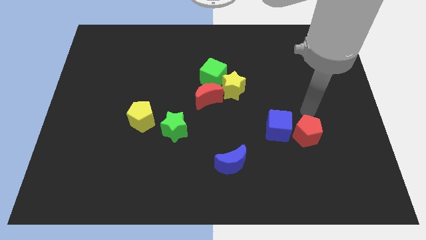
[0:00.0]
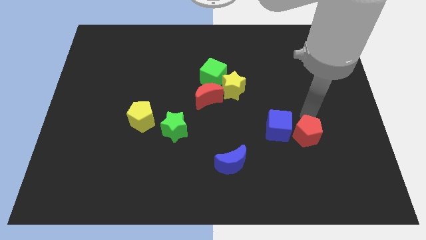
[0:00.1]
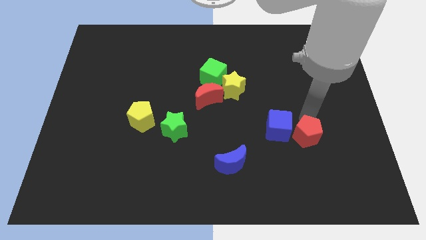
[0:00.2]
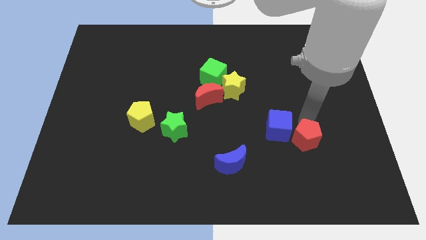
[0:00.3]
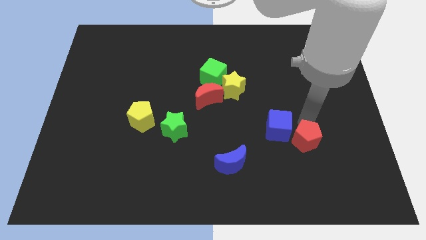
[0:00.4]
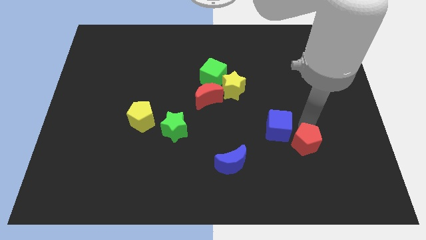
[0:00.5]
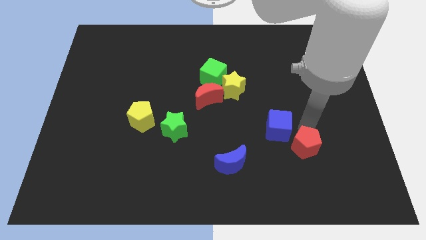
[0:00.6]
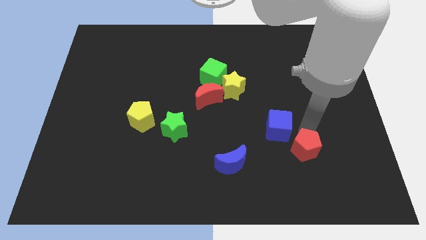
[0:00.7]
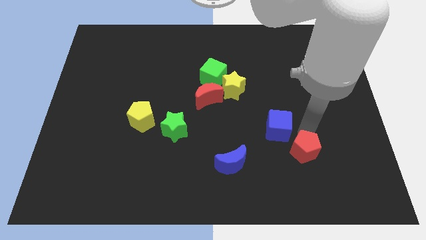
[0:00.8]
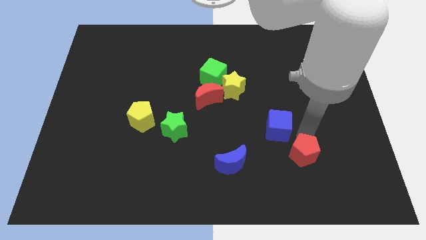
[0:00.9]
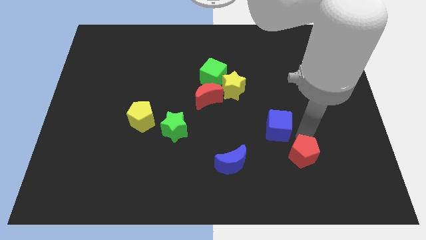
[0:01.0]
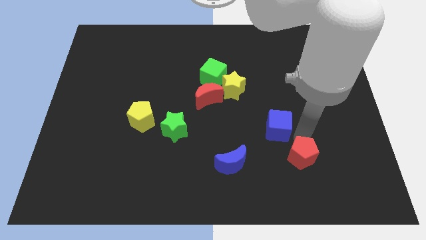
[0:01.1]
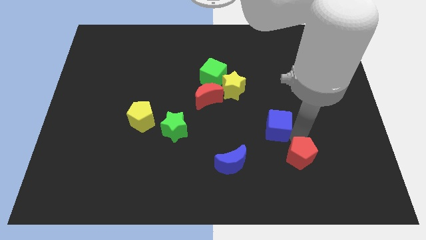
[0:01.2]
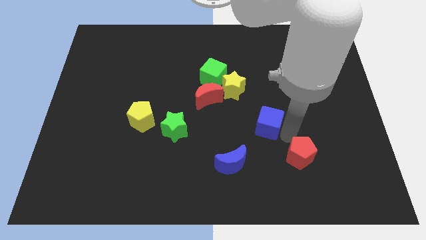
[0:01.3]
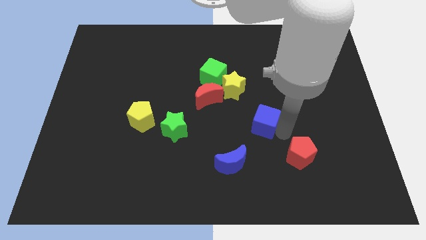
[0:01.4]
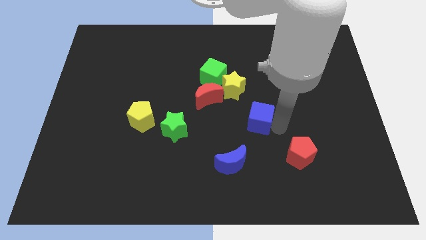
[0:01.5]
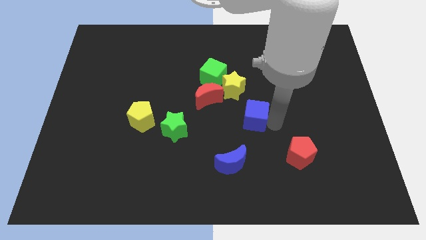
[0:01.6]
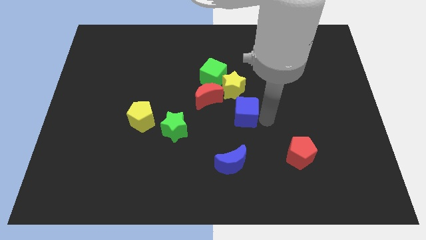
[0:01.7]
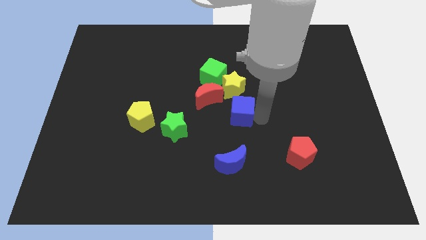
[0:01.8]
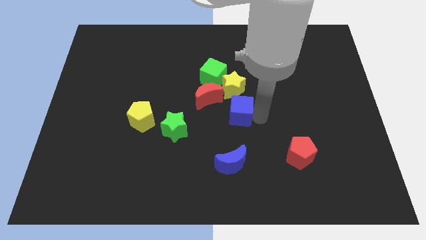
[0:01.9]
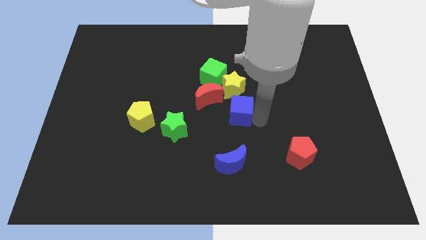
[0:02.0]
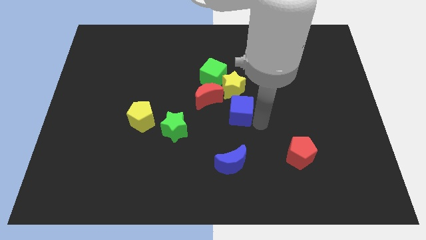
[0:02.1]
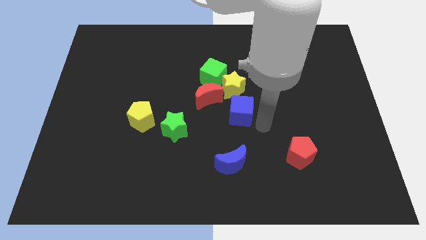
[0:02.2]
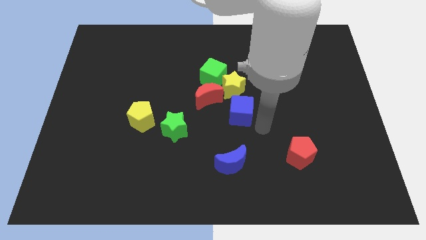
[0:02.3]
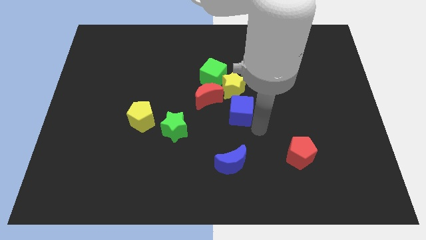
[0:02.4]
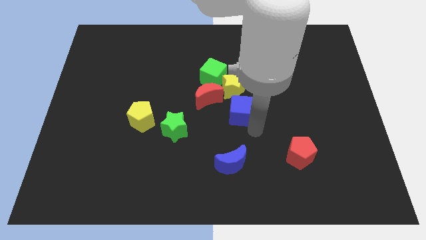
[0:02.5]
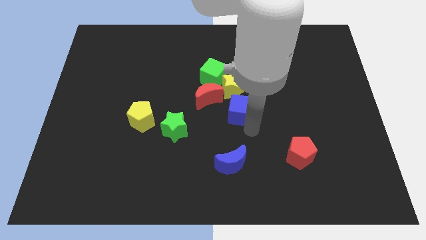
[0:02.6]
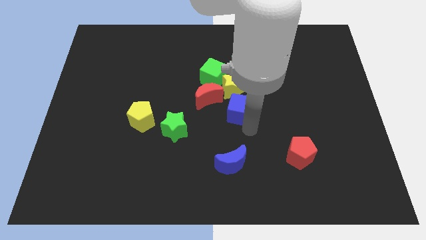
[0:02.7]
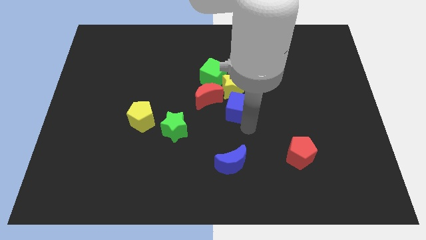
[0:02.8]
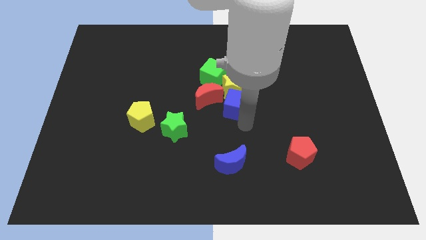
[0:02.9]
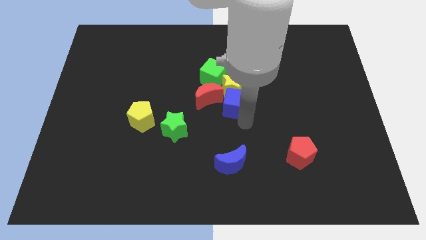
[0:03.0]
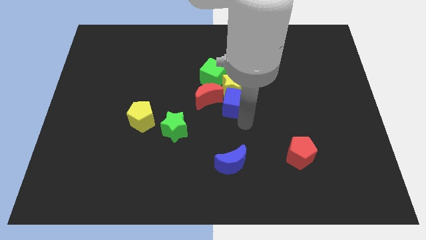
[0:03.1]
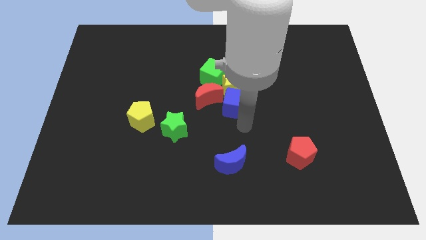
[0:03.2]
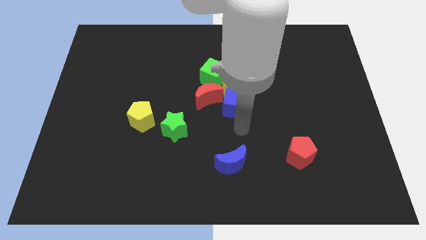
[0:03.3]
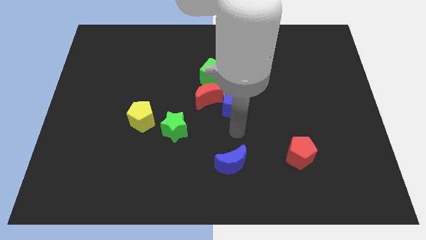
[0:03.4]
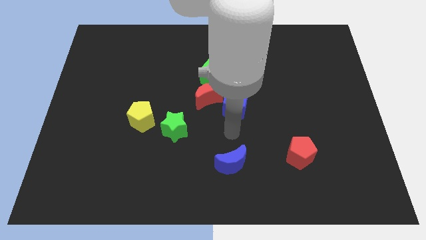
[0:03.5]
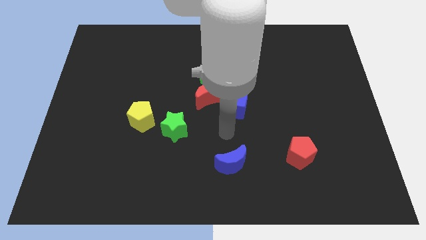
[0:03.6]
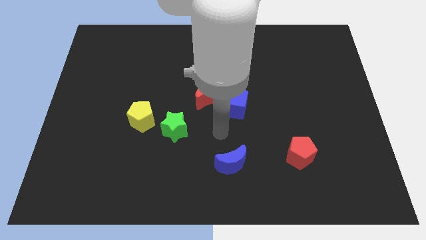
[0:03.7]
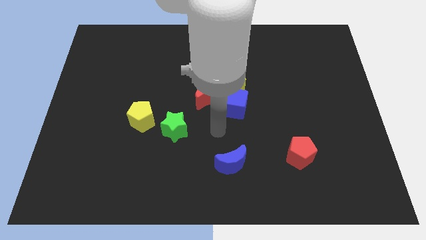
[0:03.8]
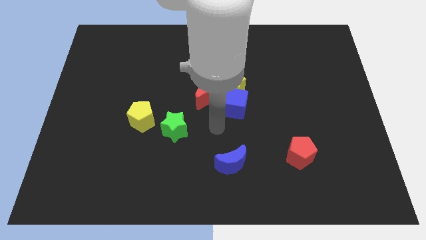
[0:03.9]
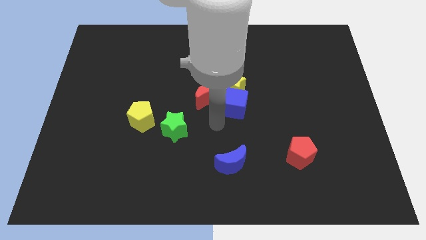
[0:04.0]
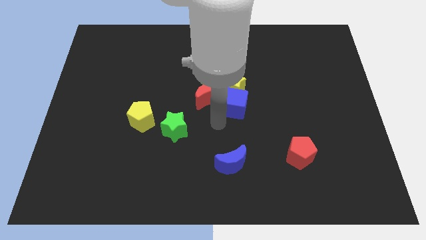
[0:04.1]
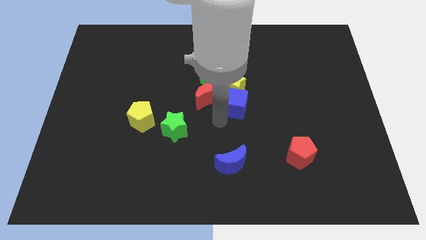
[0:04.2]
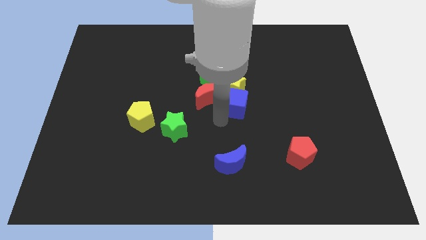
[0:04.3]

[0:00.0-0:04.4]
move the blue cube to the group of blocks

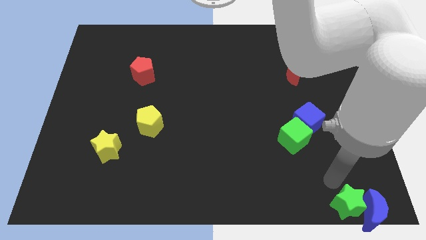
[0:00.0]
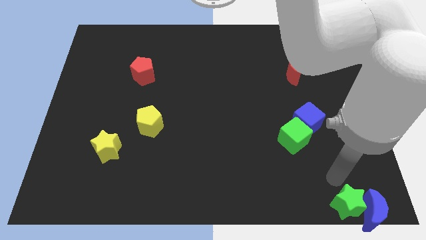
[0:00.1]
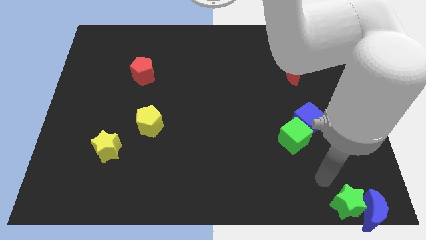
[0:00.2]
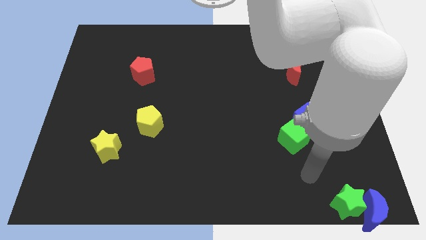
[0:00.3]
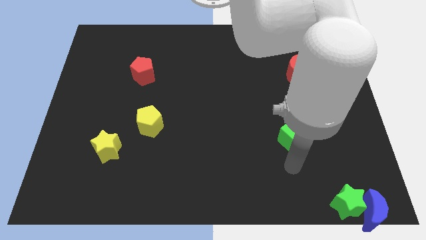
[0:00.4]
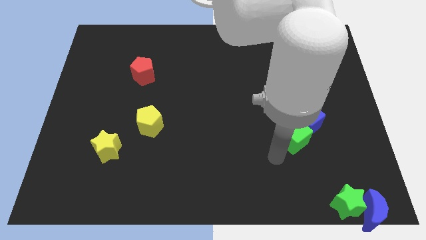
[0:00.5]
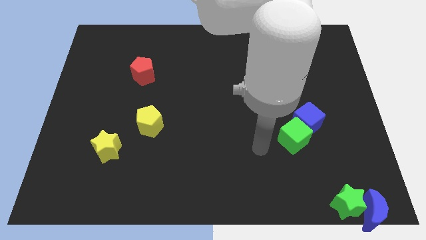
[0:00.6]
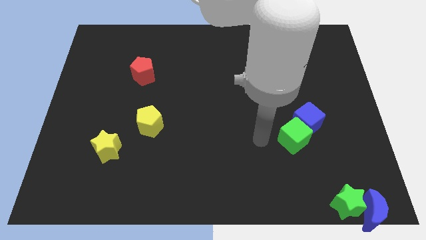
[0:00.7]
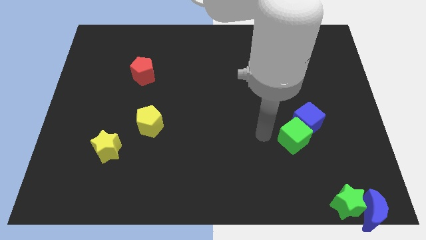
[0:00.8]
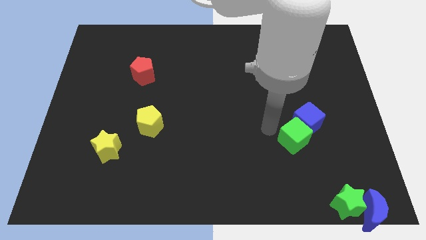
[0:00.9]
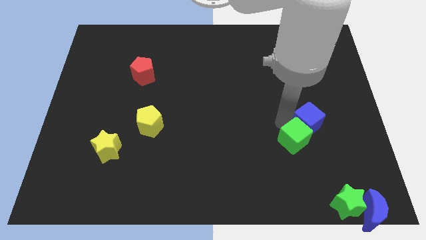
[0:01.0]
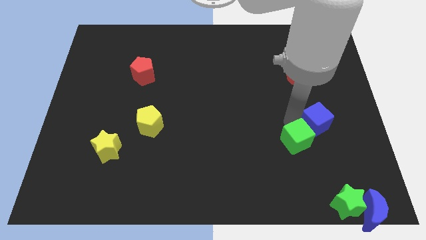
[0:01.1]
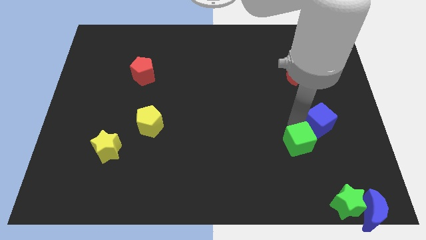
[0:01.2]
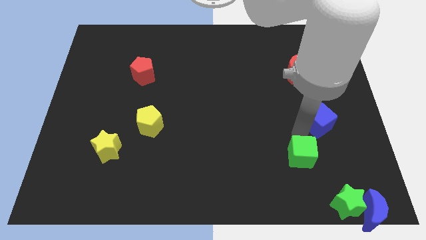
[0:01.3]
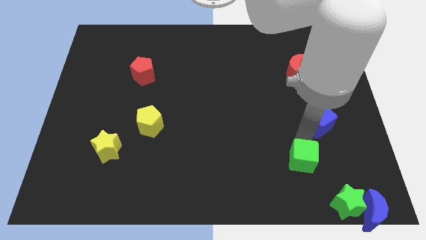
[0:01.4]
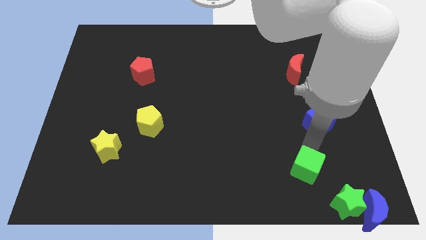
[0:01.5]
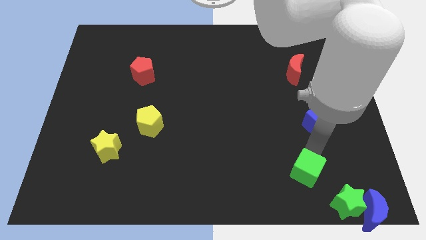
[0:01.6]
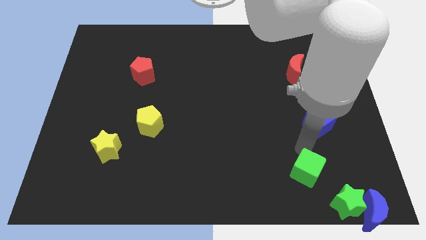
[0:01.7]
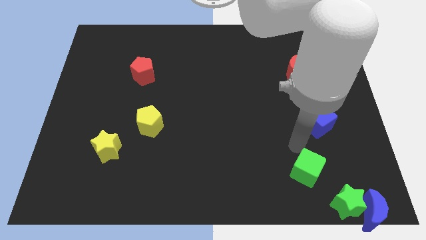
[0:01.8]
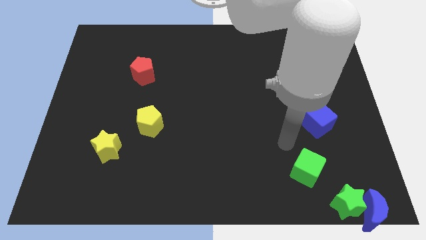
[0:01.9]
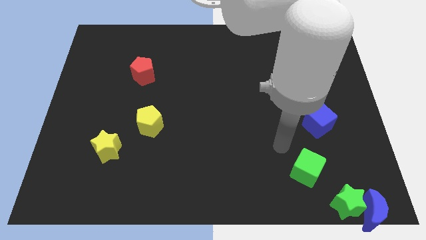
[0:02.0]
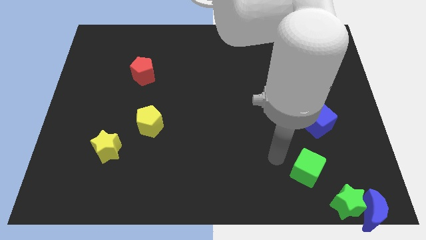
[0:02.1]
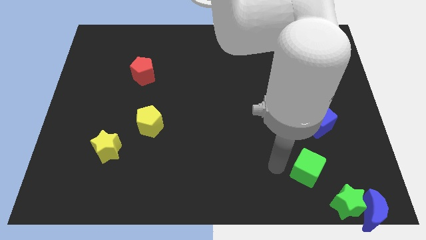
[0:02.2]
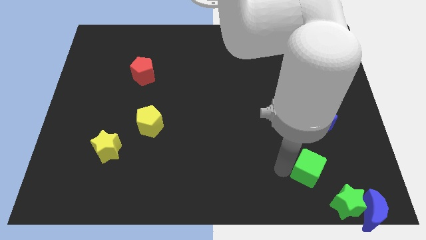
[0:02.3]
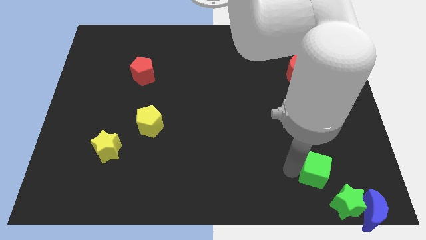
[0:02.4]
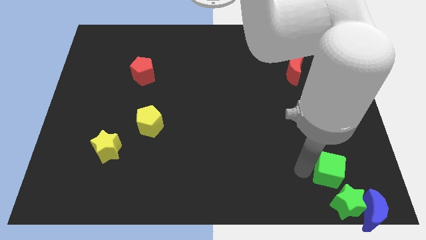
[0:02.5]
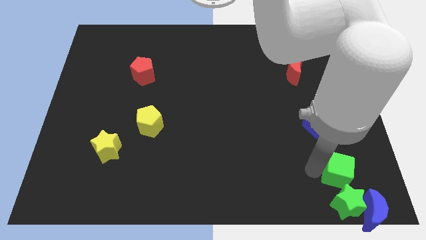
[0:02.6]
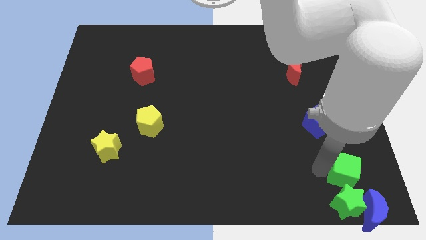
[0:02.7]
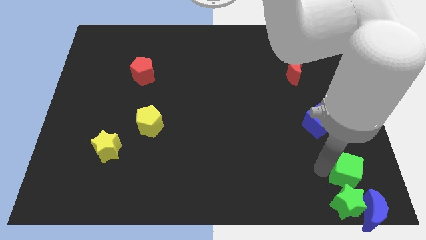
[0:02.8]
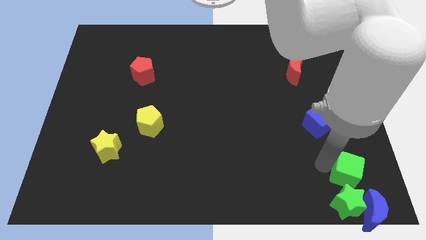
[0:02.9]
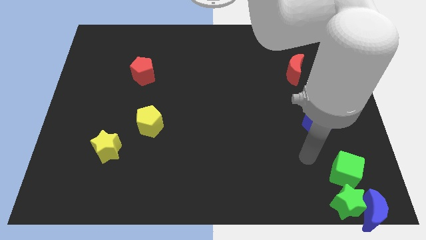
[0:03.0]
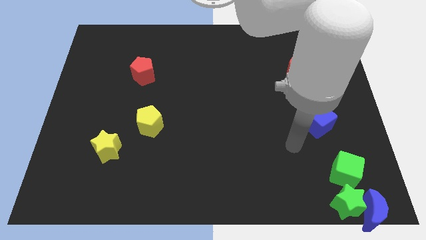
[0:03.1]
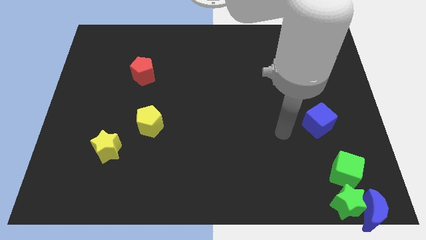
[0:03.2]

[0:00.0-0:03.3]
push the green cube towards the bottom right corner of the board

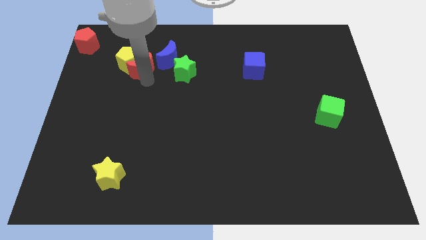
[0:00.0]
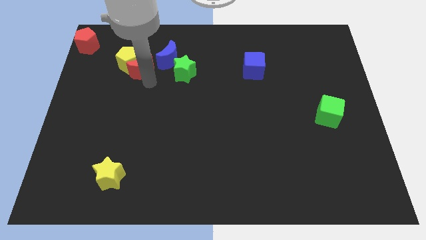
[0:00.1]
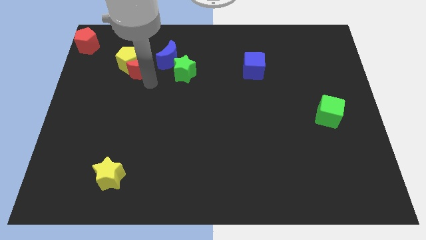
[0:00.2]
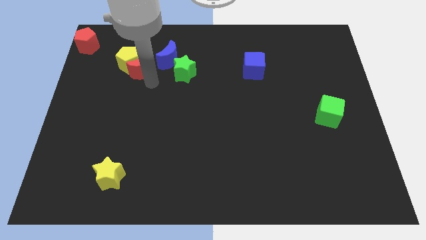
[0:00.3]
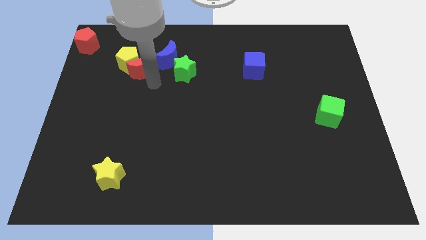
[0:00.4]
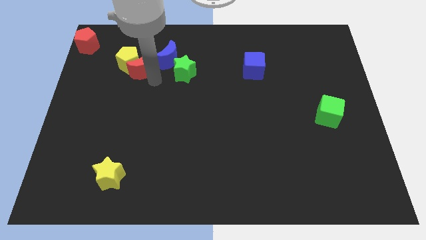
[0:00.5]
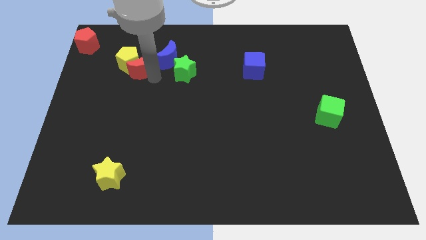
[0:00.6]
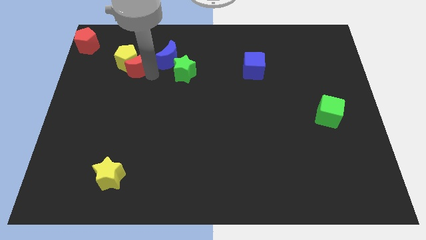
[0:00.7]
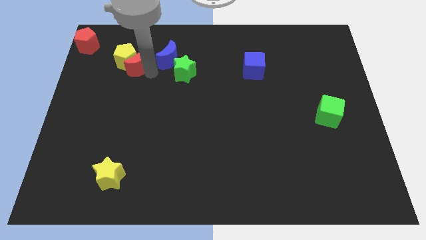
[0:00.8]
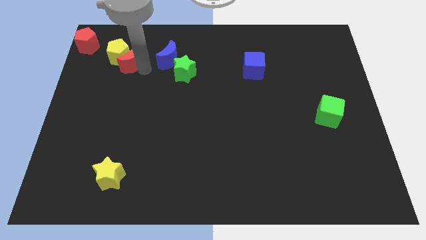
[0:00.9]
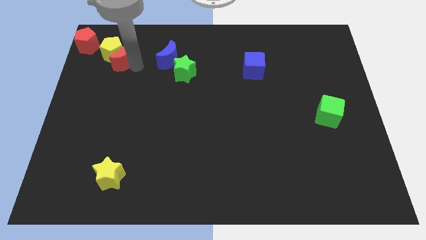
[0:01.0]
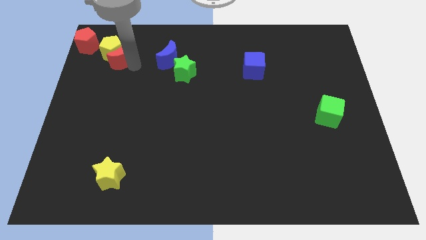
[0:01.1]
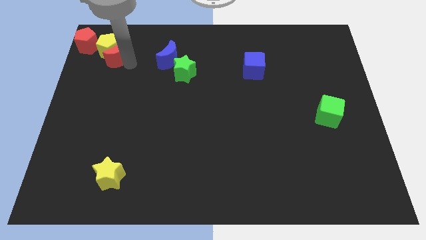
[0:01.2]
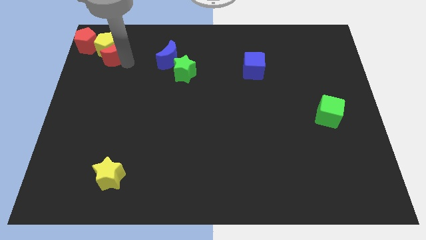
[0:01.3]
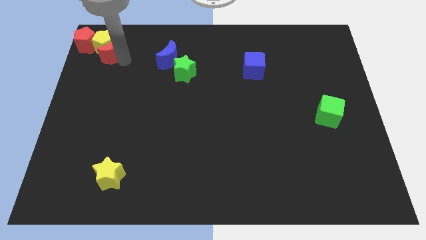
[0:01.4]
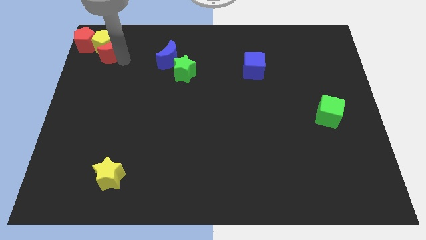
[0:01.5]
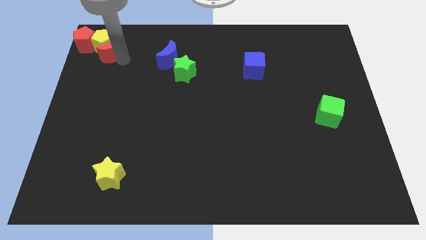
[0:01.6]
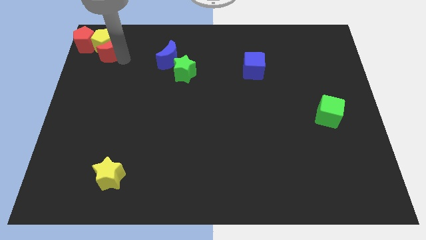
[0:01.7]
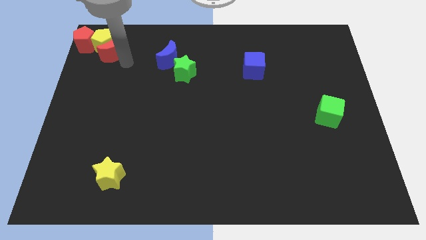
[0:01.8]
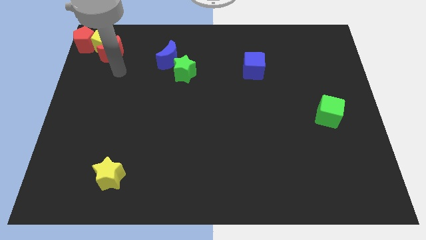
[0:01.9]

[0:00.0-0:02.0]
move the red moon and yellow pentagon to top left
